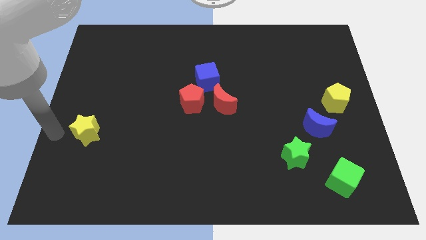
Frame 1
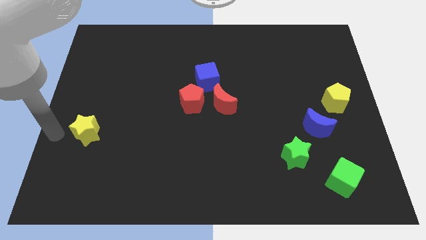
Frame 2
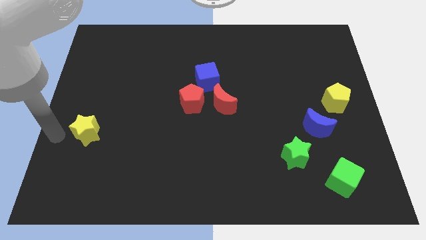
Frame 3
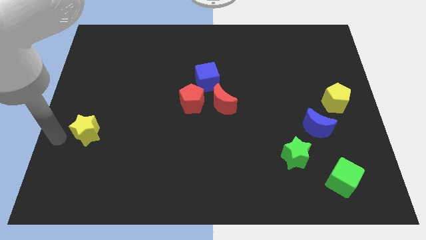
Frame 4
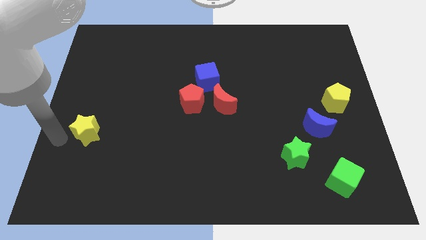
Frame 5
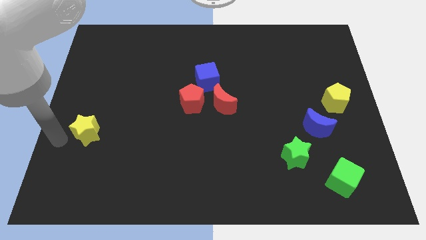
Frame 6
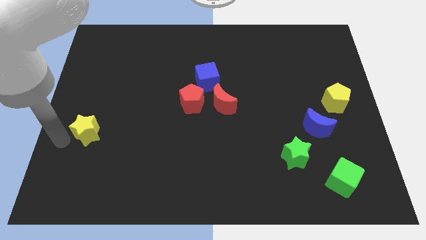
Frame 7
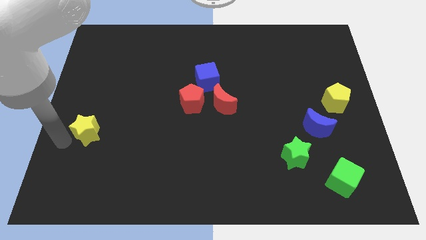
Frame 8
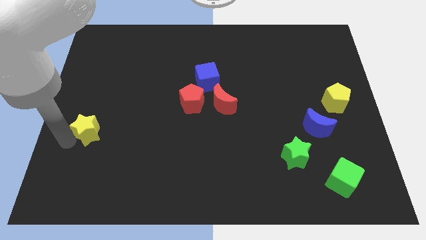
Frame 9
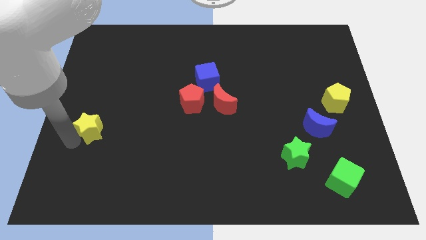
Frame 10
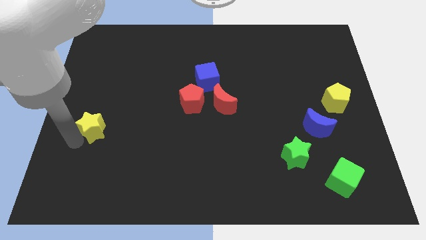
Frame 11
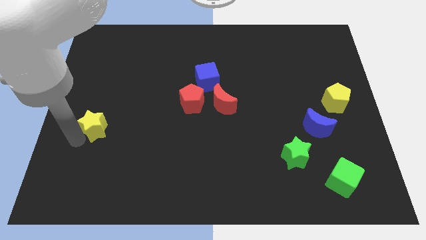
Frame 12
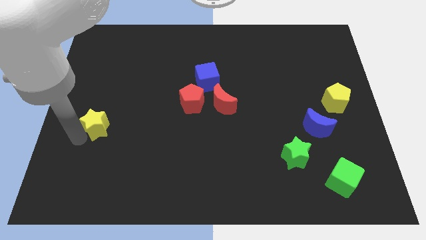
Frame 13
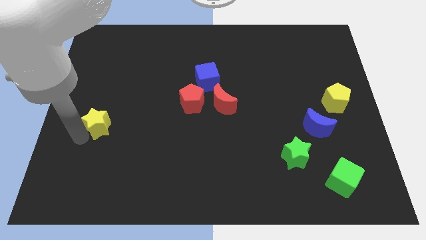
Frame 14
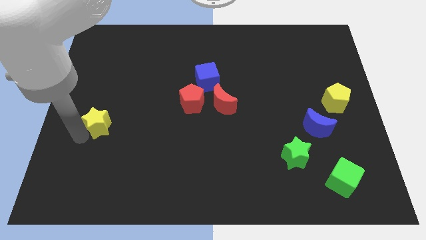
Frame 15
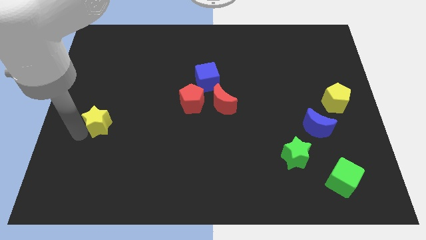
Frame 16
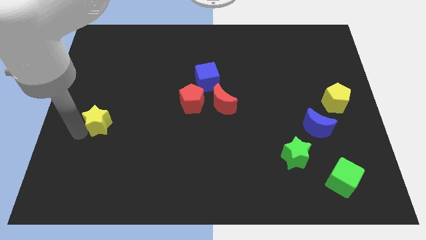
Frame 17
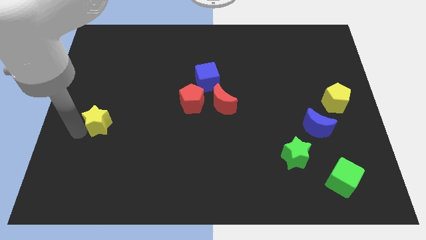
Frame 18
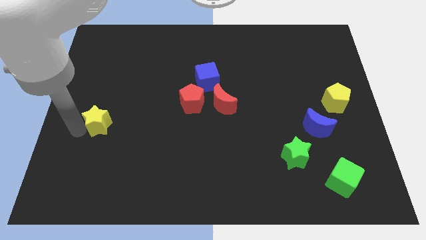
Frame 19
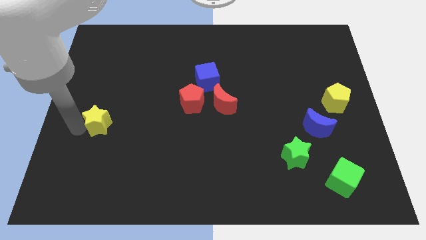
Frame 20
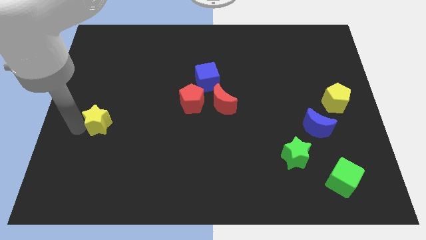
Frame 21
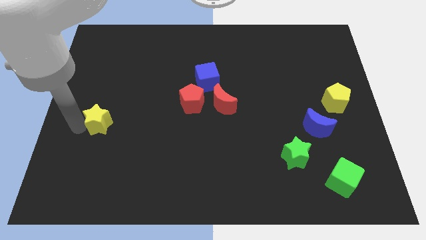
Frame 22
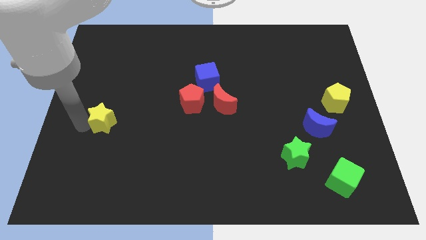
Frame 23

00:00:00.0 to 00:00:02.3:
push the yellow star slightly to the top

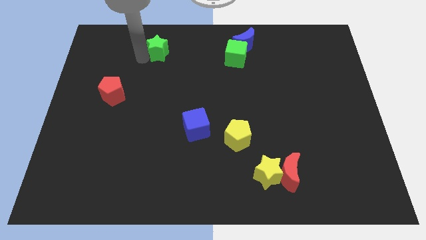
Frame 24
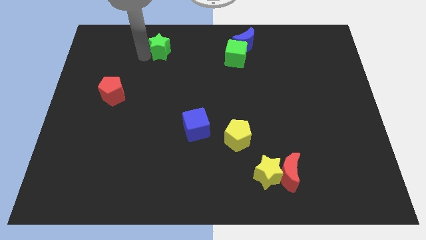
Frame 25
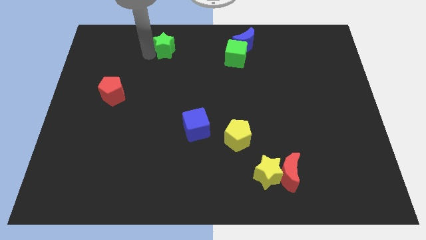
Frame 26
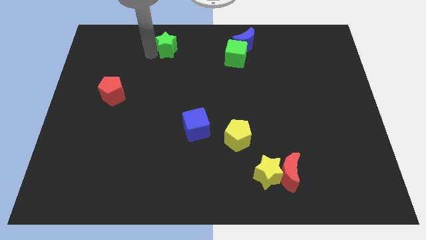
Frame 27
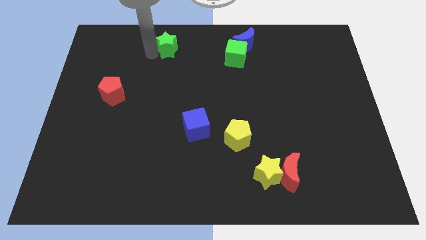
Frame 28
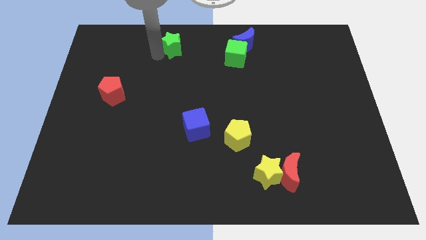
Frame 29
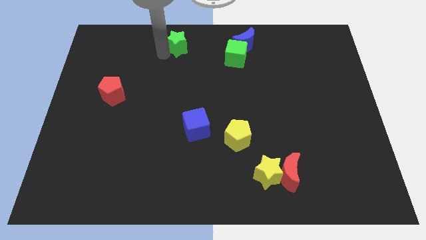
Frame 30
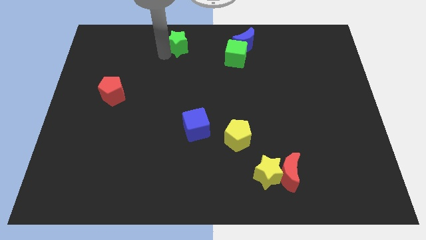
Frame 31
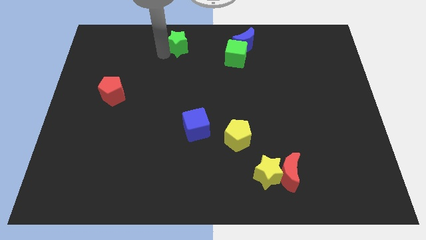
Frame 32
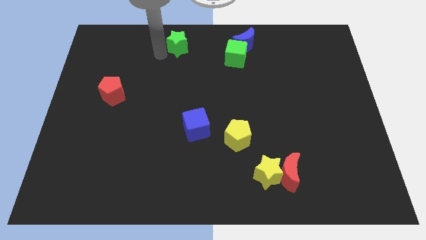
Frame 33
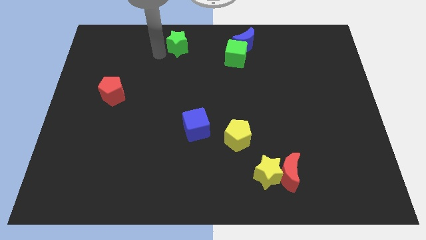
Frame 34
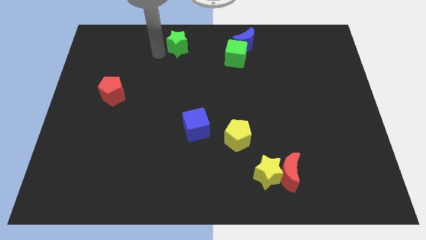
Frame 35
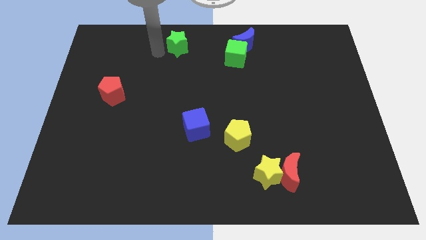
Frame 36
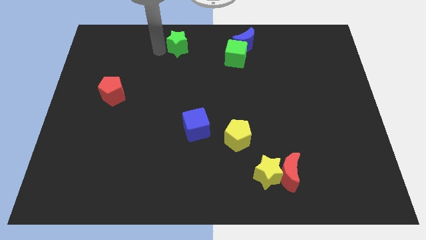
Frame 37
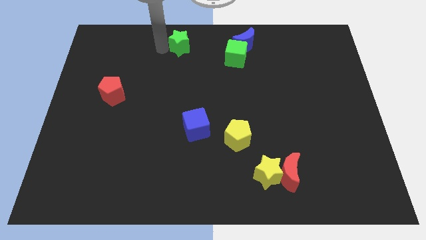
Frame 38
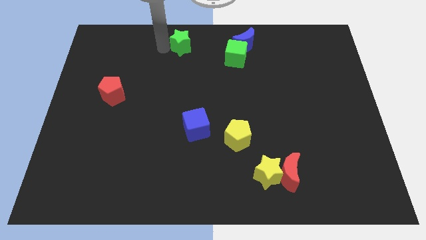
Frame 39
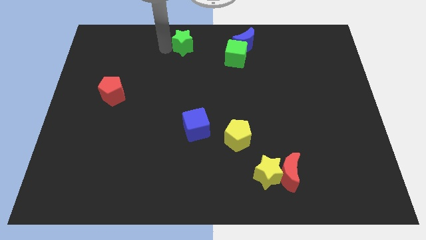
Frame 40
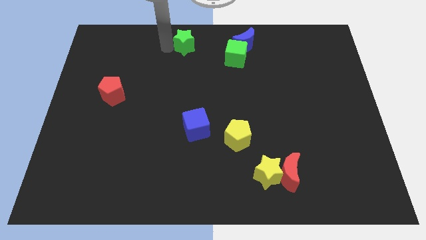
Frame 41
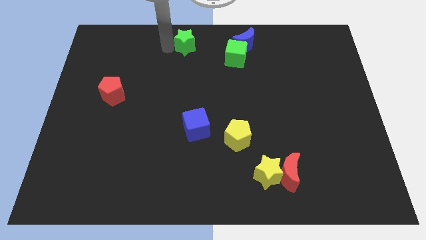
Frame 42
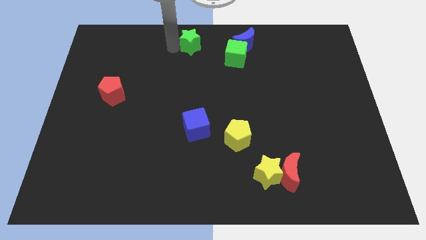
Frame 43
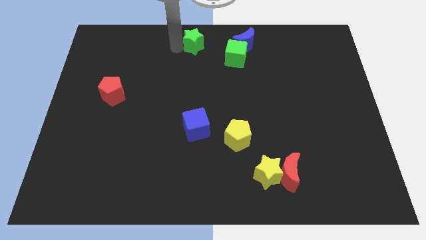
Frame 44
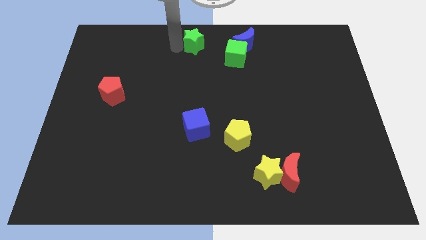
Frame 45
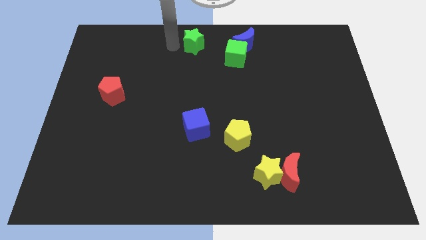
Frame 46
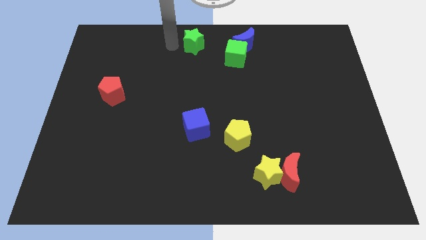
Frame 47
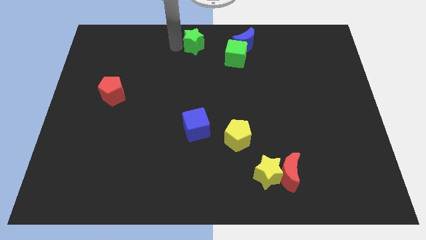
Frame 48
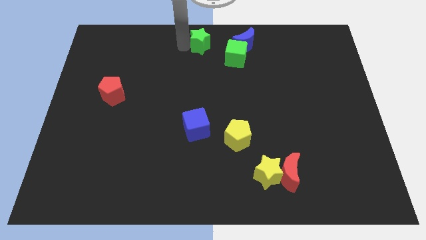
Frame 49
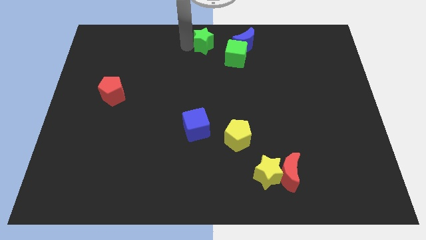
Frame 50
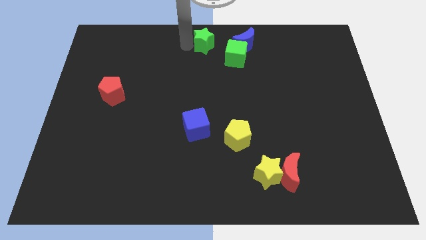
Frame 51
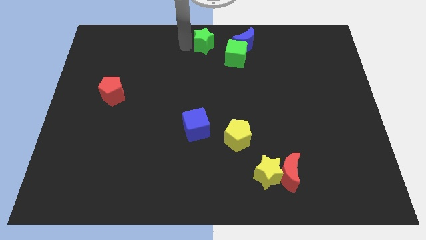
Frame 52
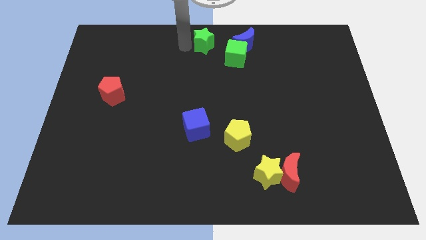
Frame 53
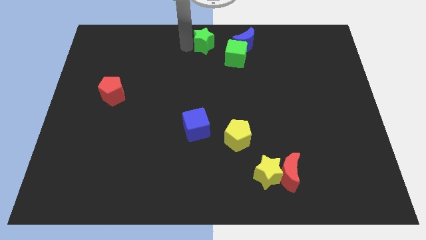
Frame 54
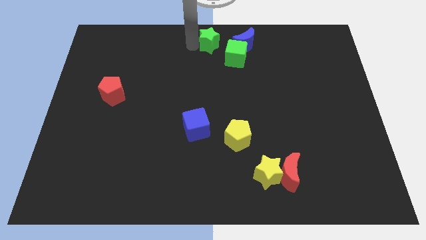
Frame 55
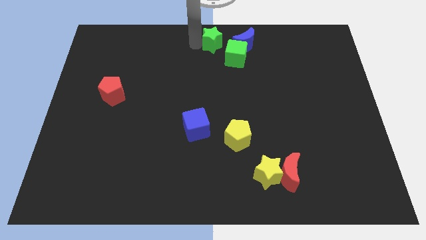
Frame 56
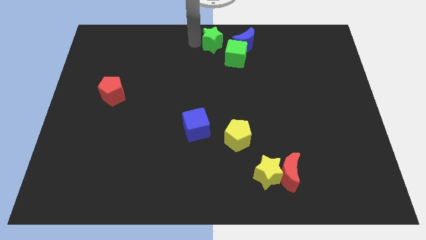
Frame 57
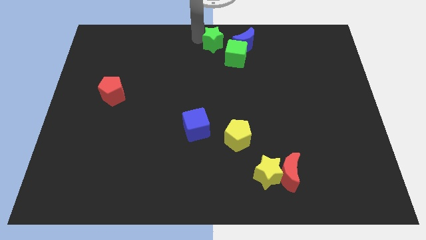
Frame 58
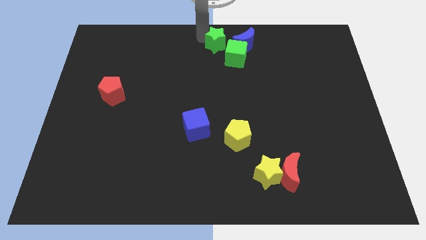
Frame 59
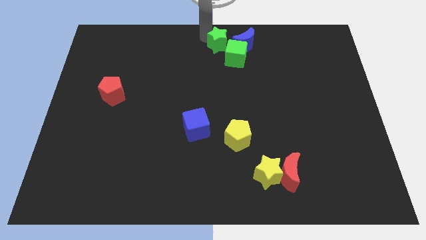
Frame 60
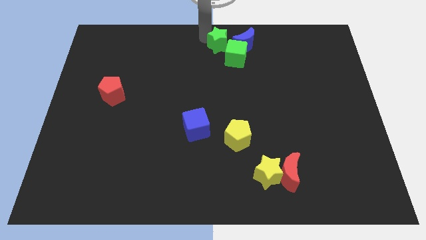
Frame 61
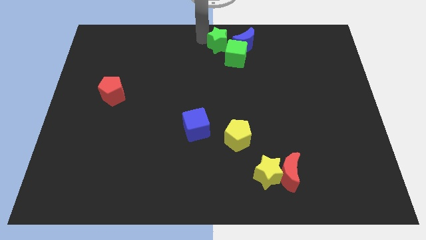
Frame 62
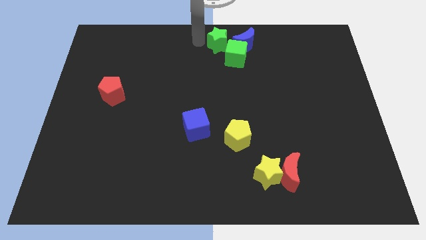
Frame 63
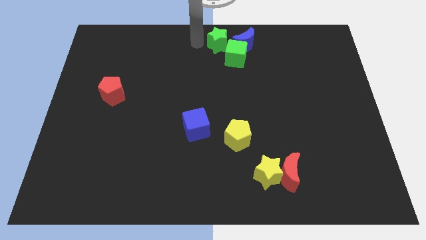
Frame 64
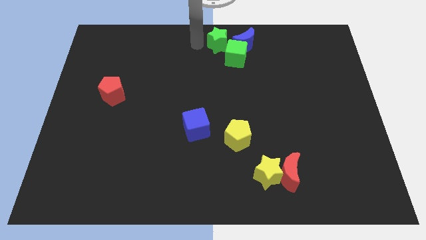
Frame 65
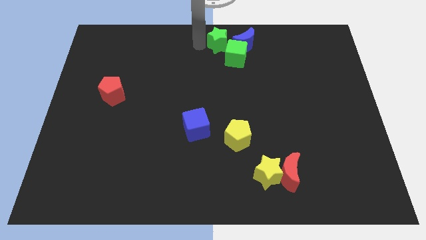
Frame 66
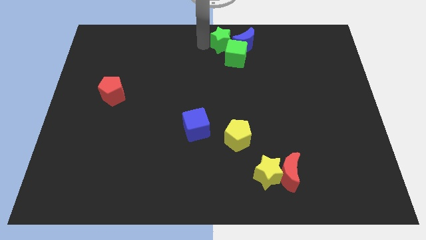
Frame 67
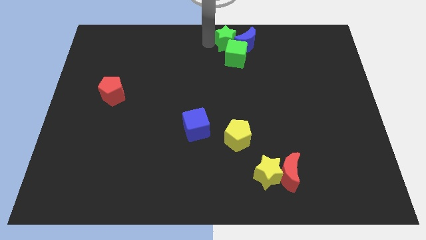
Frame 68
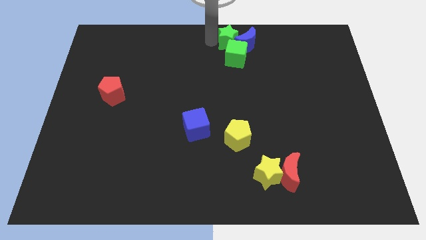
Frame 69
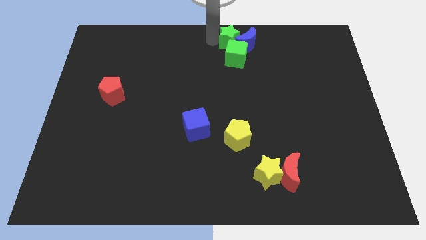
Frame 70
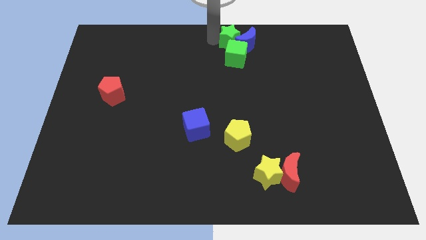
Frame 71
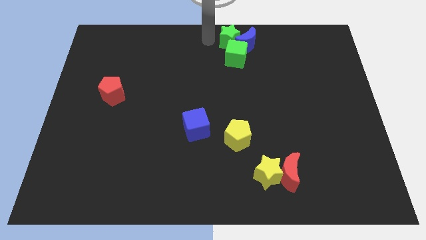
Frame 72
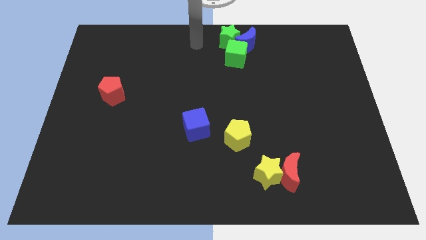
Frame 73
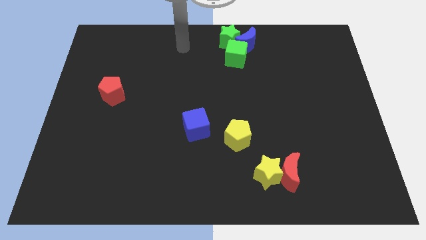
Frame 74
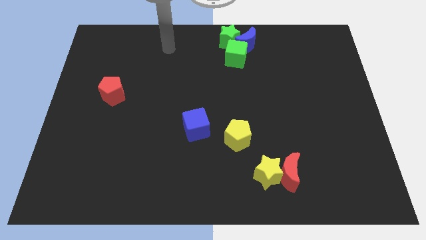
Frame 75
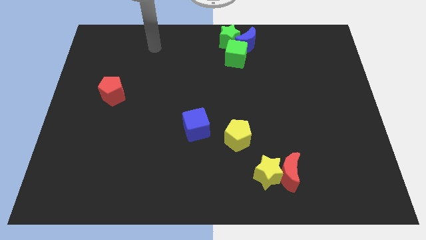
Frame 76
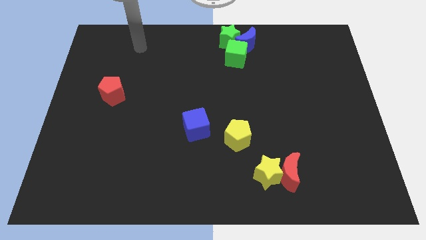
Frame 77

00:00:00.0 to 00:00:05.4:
add the green star to the green cube and blue moon

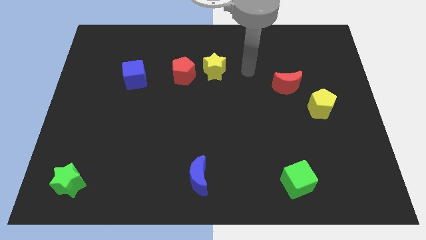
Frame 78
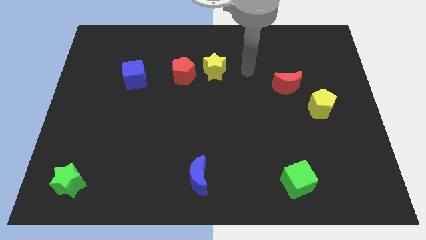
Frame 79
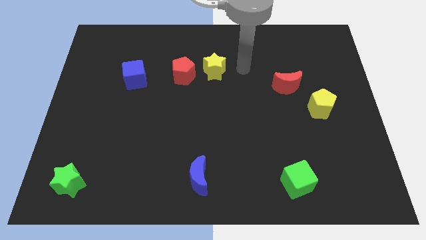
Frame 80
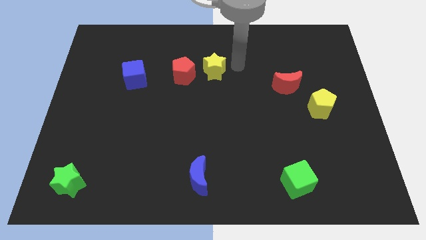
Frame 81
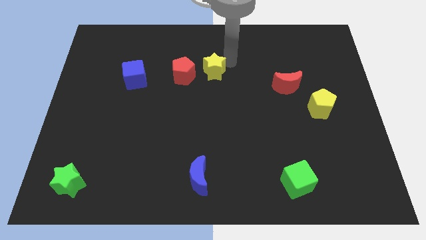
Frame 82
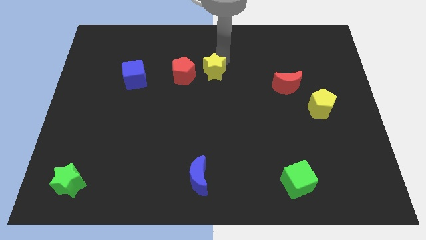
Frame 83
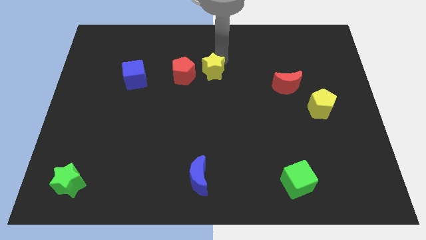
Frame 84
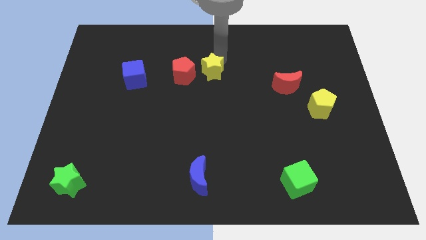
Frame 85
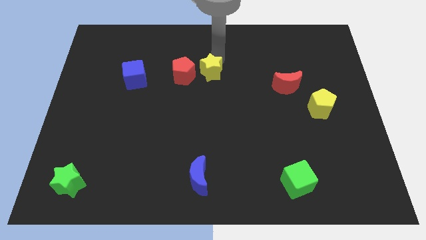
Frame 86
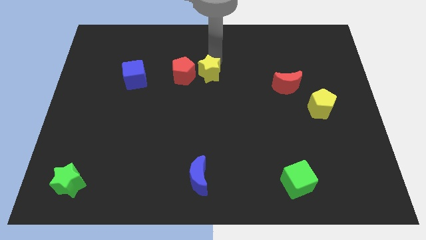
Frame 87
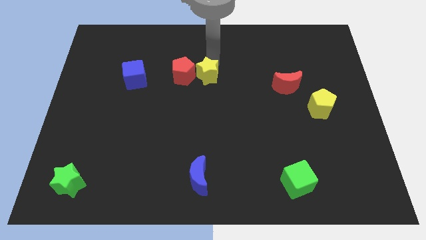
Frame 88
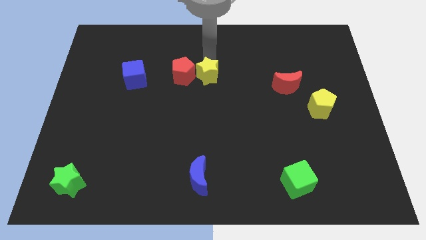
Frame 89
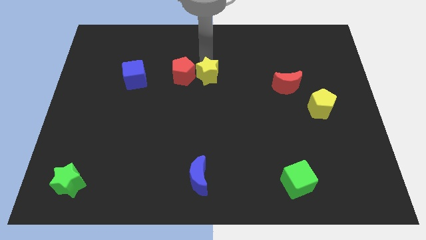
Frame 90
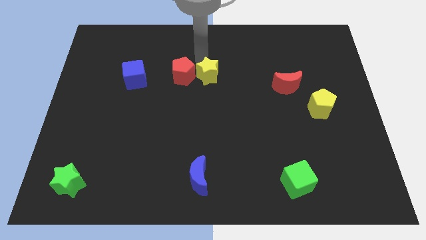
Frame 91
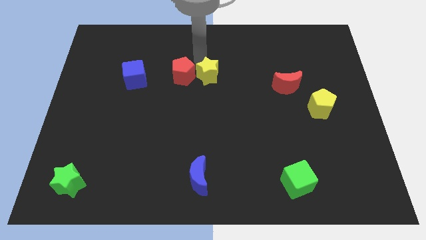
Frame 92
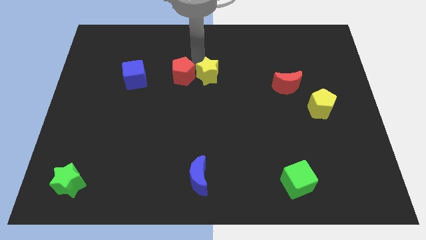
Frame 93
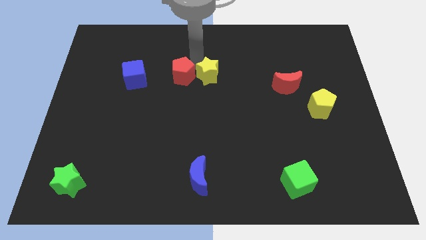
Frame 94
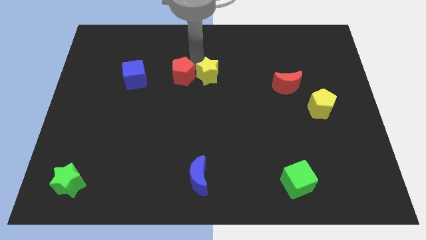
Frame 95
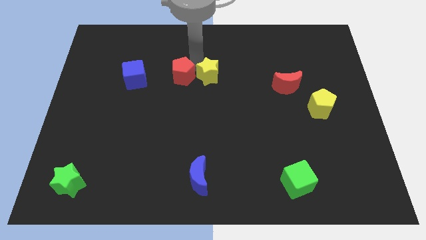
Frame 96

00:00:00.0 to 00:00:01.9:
move the yellow star to the right side of the red pentagon
